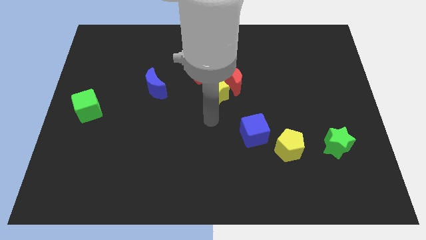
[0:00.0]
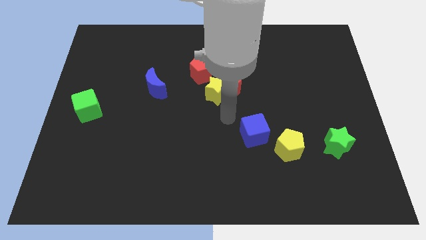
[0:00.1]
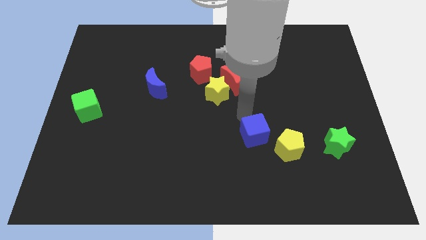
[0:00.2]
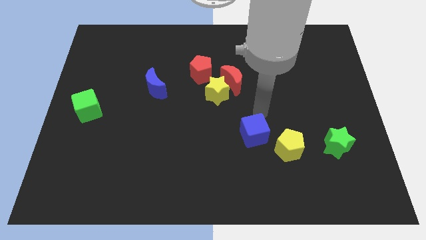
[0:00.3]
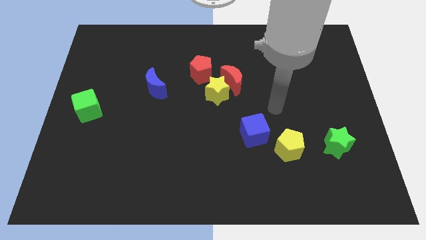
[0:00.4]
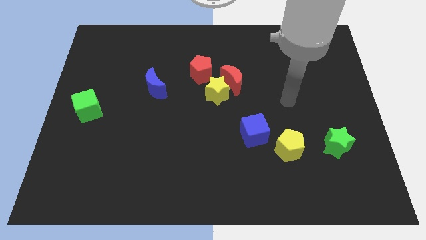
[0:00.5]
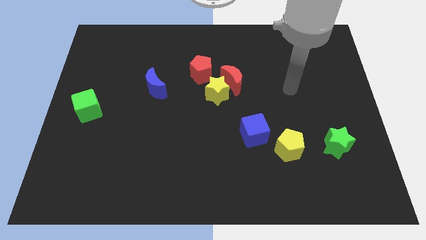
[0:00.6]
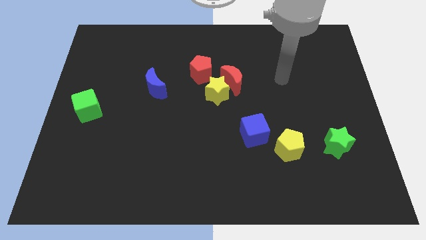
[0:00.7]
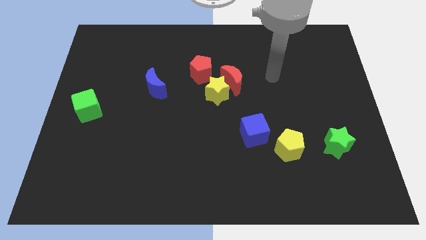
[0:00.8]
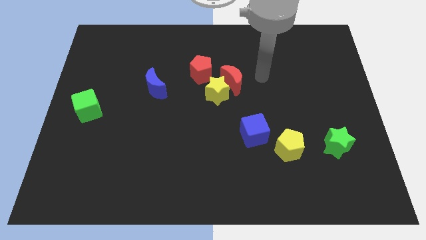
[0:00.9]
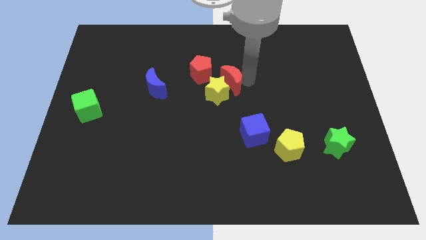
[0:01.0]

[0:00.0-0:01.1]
place arm on the right side of red crescent

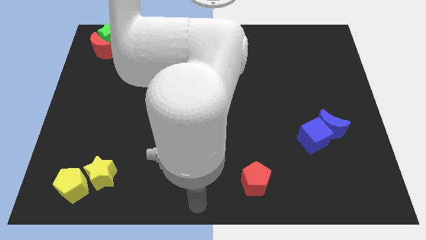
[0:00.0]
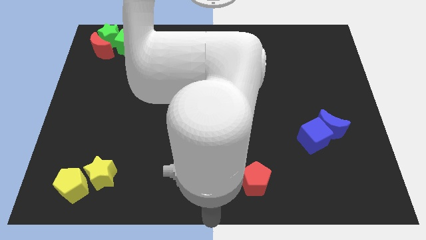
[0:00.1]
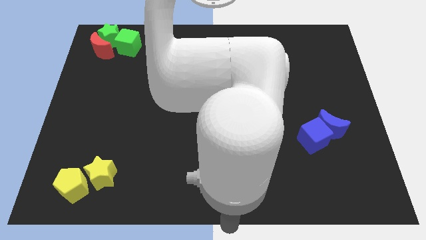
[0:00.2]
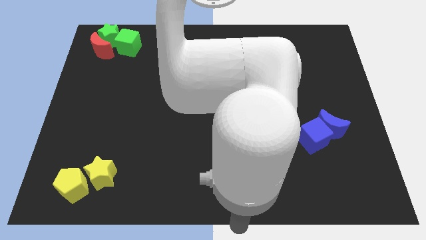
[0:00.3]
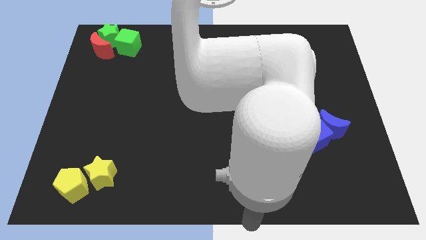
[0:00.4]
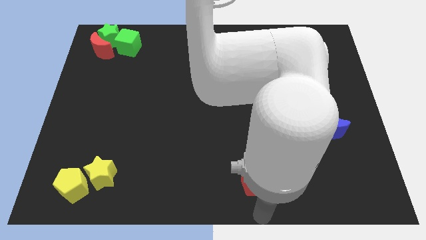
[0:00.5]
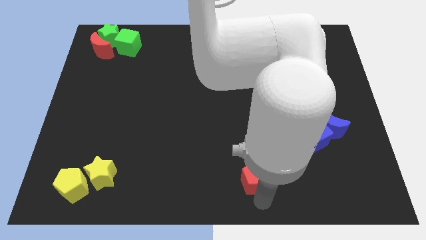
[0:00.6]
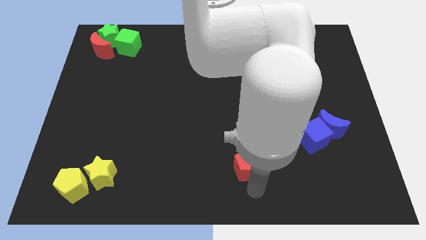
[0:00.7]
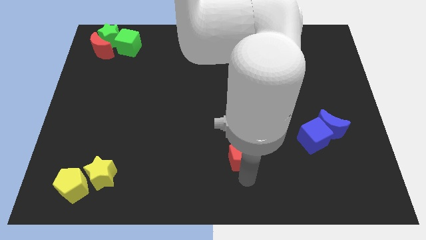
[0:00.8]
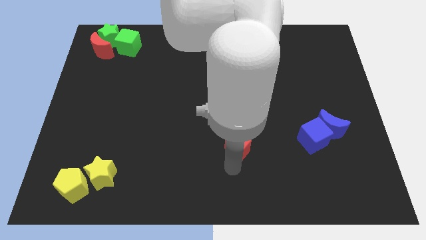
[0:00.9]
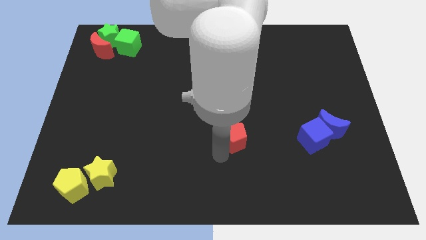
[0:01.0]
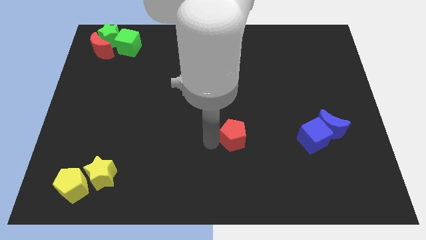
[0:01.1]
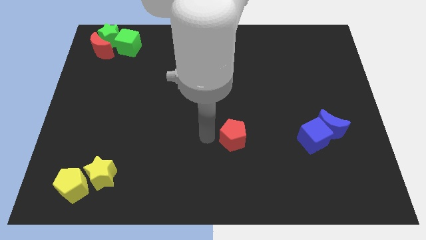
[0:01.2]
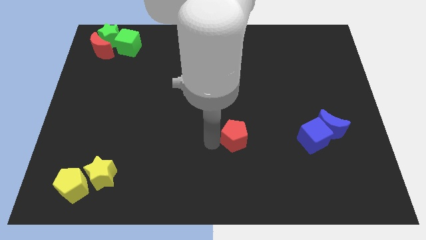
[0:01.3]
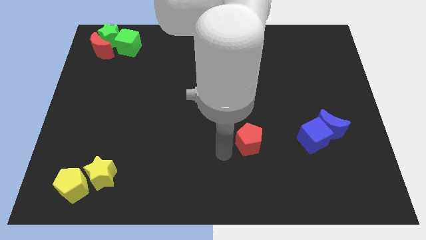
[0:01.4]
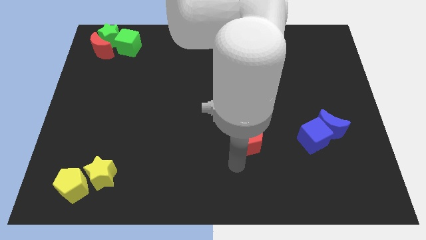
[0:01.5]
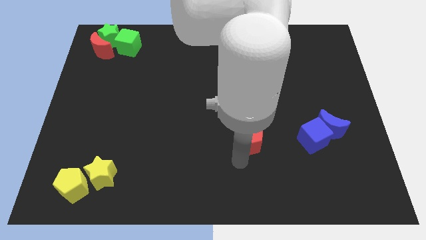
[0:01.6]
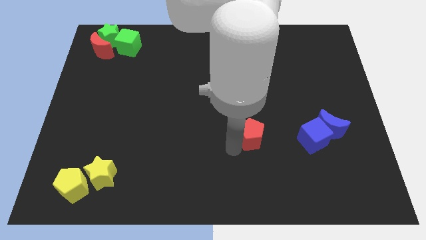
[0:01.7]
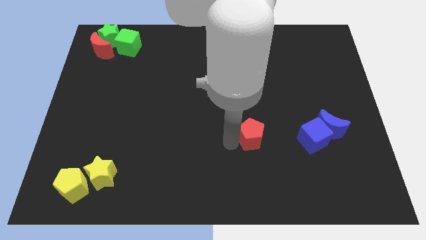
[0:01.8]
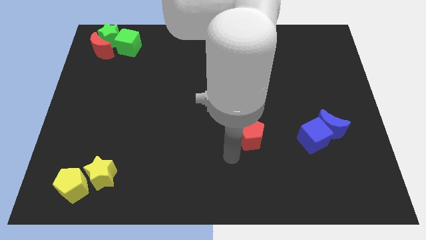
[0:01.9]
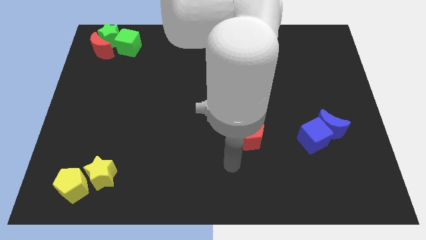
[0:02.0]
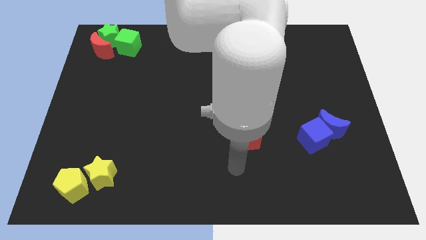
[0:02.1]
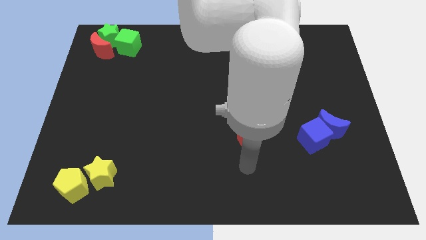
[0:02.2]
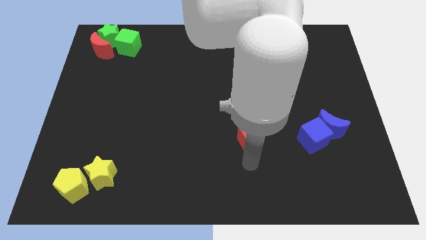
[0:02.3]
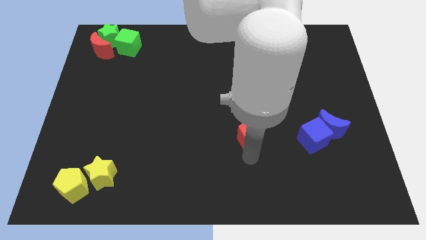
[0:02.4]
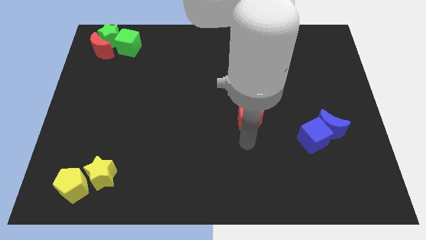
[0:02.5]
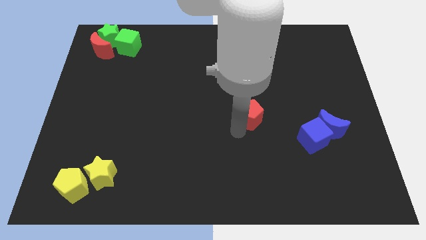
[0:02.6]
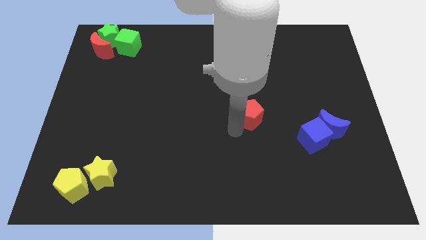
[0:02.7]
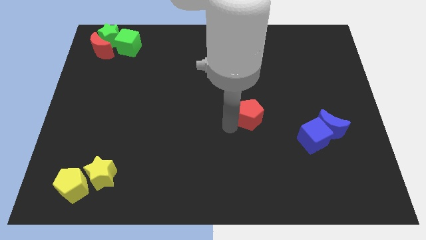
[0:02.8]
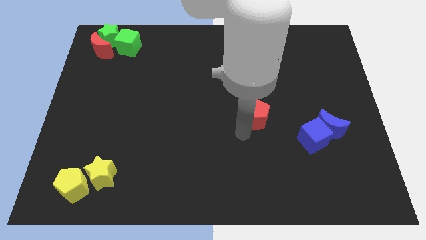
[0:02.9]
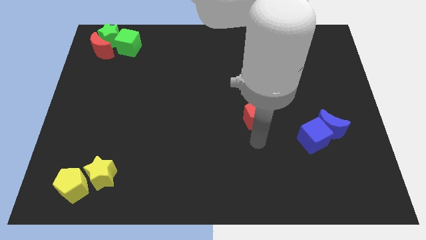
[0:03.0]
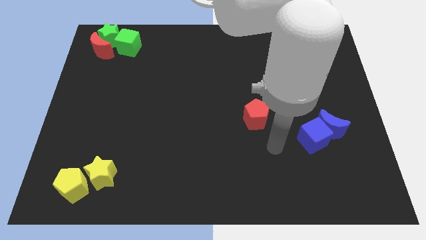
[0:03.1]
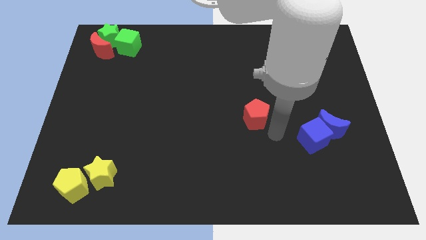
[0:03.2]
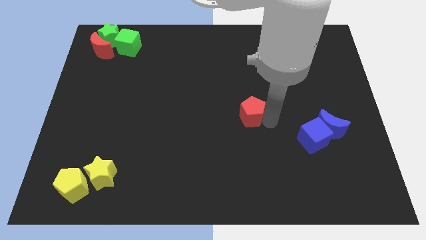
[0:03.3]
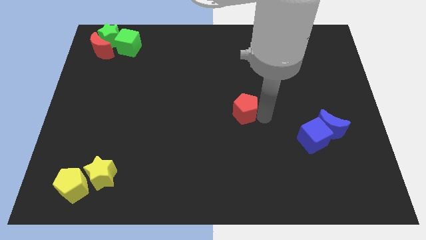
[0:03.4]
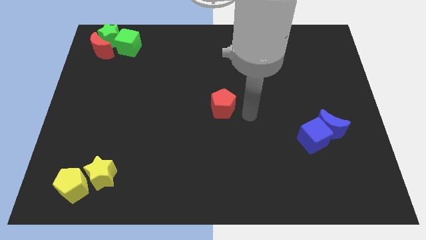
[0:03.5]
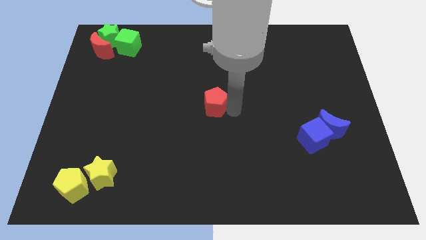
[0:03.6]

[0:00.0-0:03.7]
move the red pentagon to the center of the board

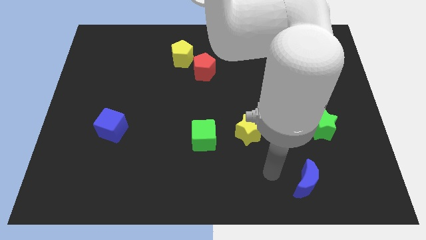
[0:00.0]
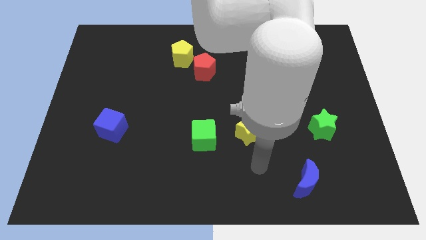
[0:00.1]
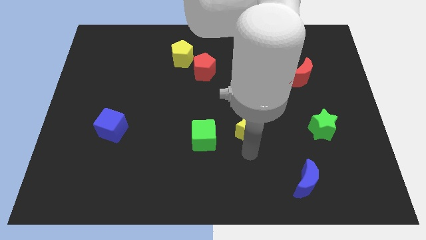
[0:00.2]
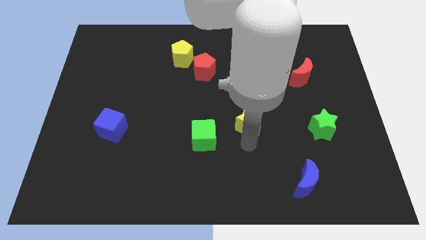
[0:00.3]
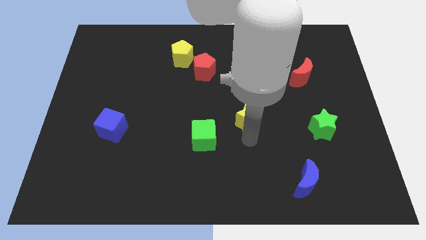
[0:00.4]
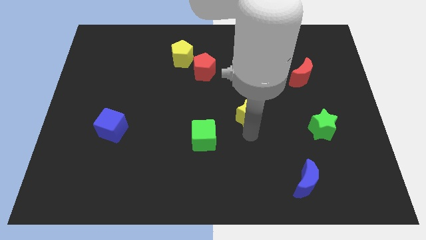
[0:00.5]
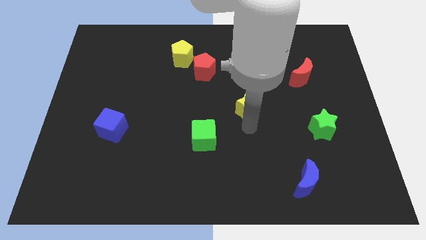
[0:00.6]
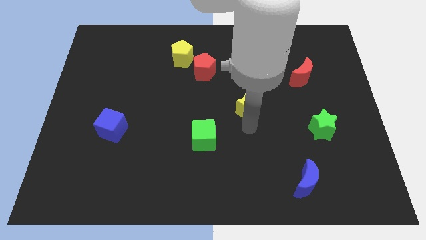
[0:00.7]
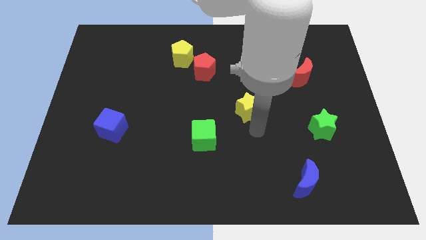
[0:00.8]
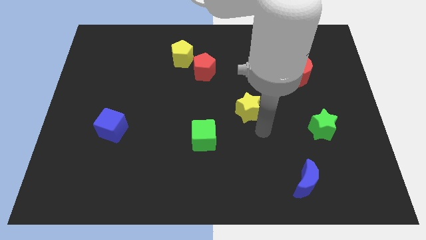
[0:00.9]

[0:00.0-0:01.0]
push the yellow star upwards

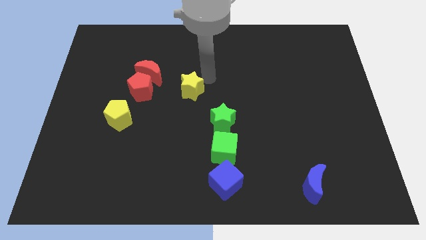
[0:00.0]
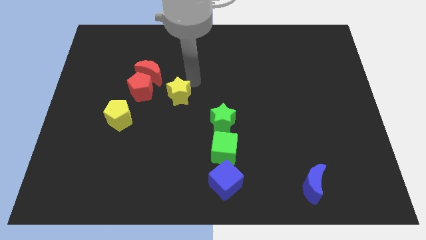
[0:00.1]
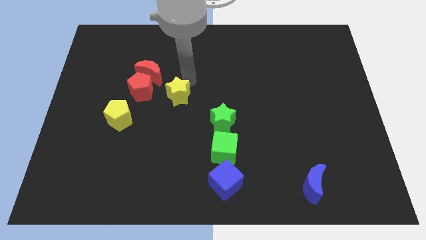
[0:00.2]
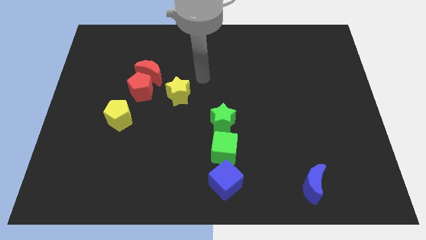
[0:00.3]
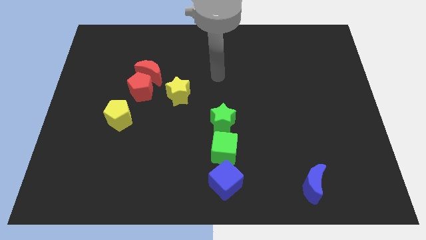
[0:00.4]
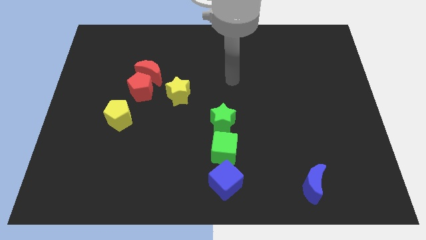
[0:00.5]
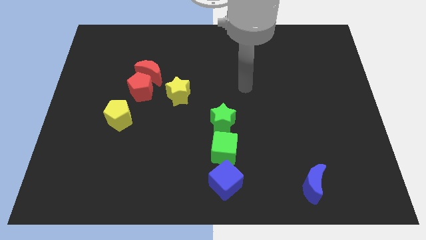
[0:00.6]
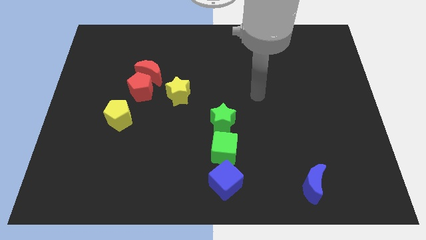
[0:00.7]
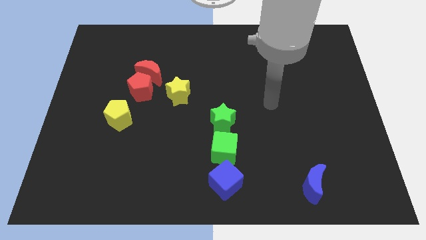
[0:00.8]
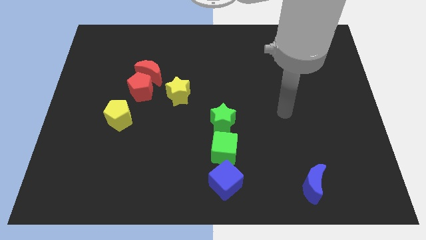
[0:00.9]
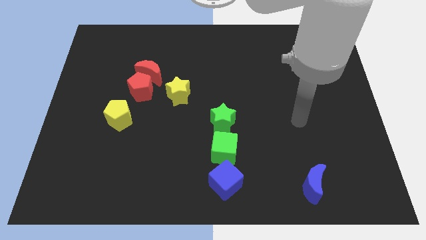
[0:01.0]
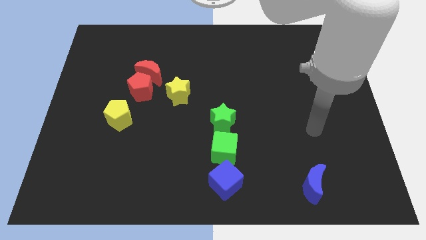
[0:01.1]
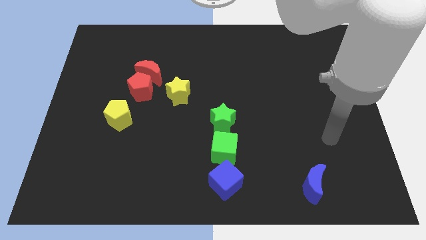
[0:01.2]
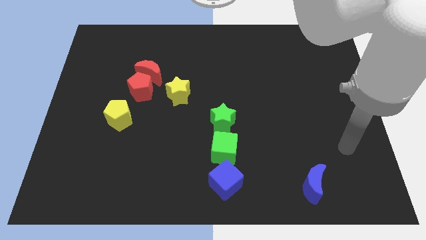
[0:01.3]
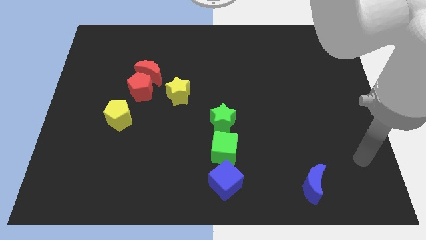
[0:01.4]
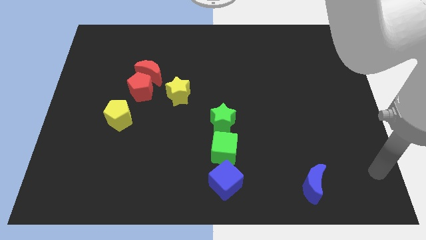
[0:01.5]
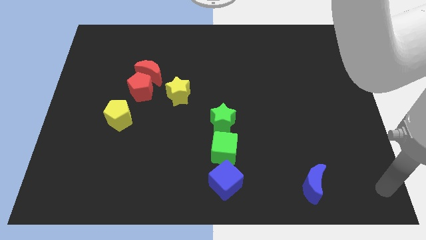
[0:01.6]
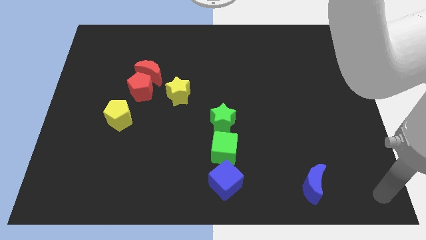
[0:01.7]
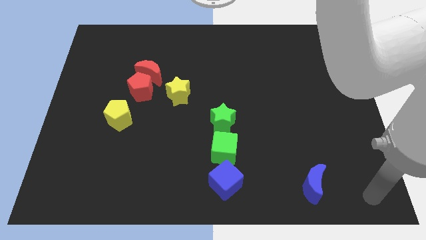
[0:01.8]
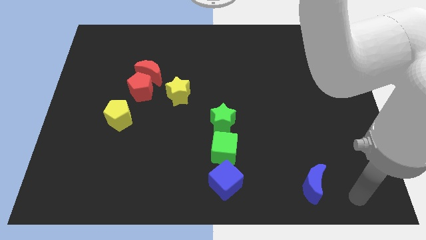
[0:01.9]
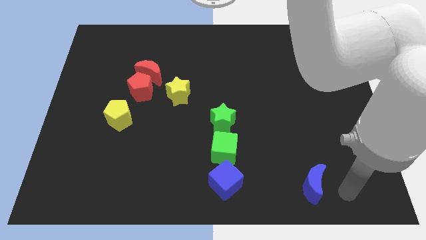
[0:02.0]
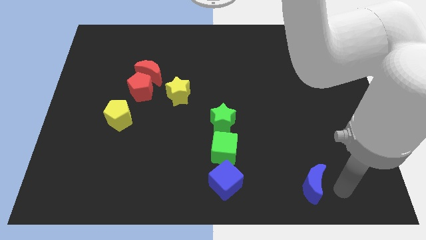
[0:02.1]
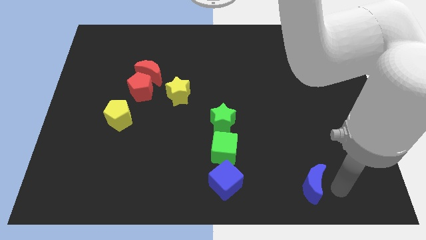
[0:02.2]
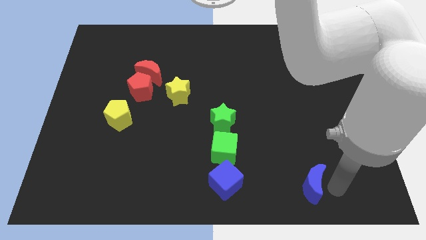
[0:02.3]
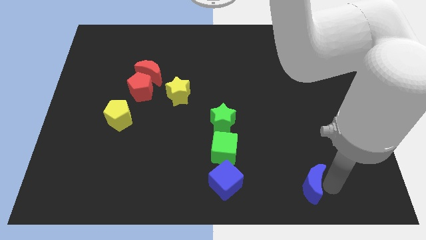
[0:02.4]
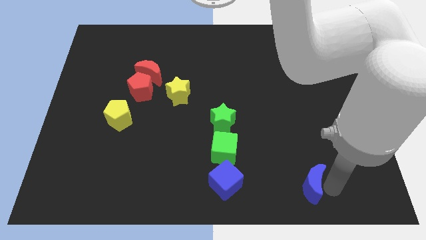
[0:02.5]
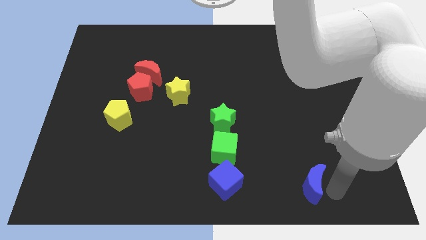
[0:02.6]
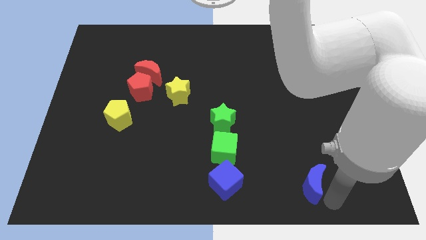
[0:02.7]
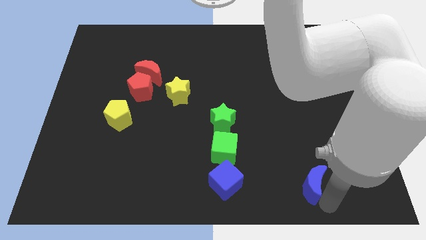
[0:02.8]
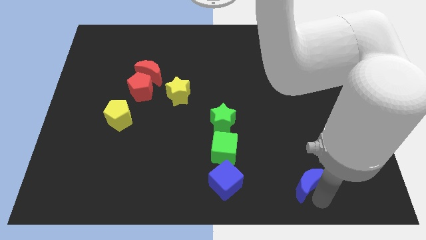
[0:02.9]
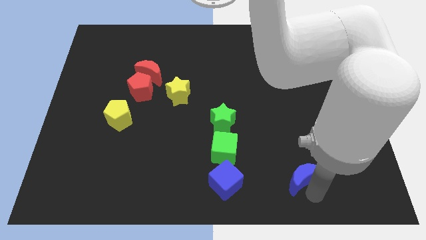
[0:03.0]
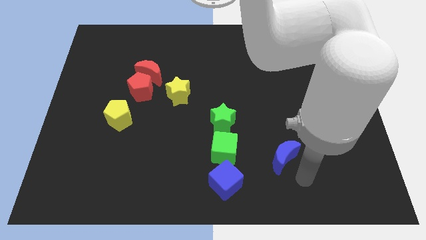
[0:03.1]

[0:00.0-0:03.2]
move the arm parallel to the blue cube
